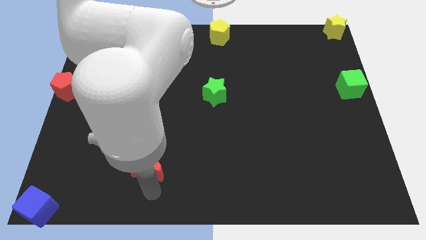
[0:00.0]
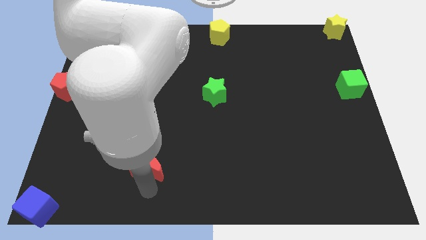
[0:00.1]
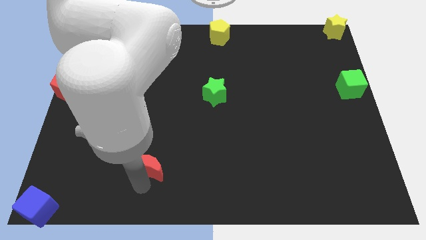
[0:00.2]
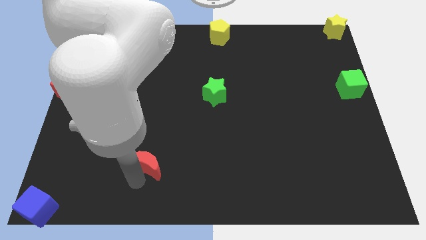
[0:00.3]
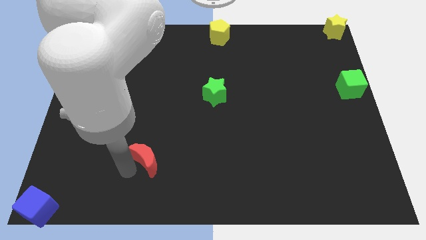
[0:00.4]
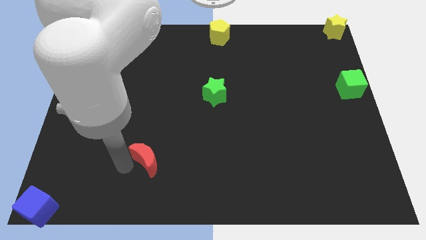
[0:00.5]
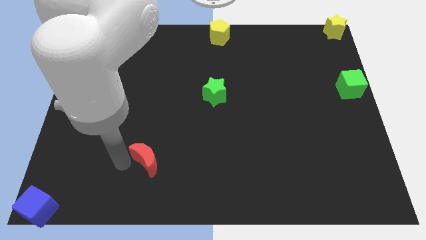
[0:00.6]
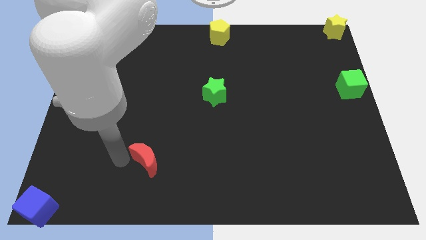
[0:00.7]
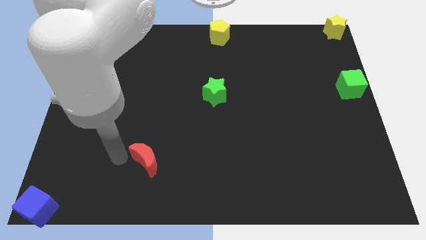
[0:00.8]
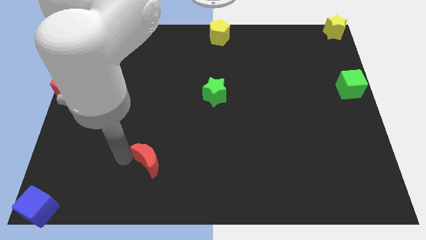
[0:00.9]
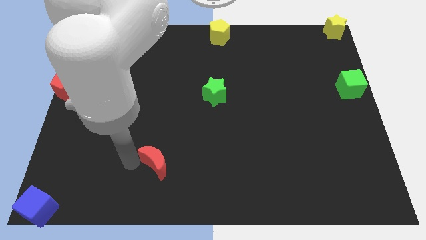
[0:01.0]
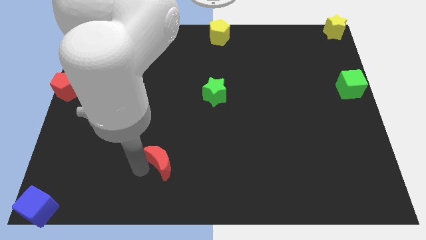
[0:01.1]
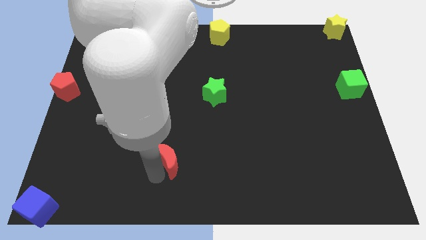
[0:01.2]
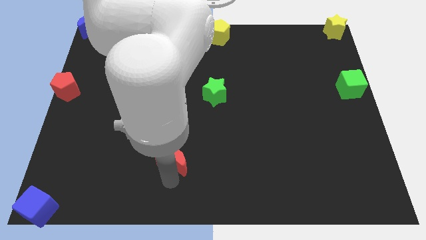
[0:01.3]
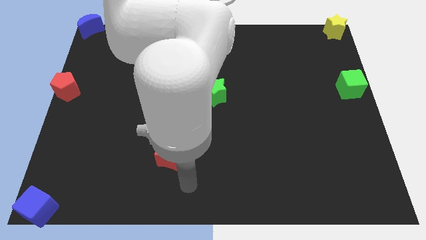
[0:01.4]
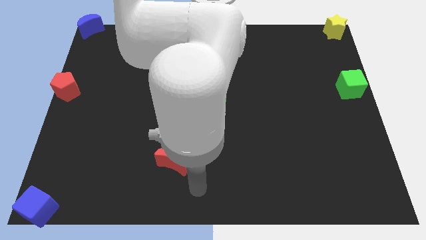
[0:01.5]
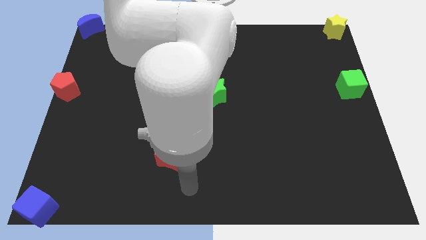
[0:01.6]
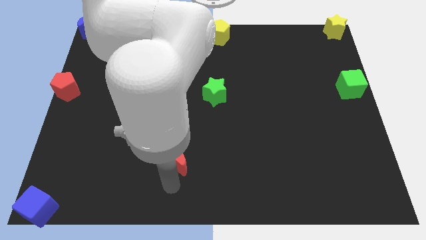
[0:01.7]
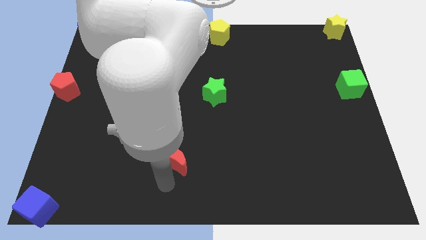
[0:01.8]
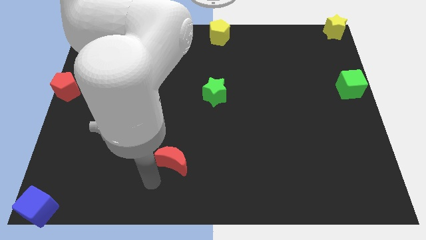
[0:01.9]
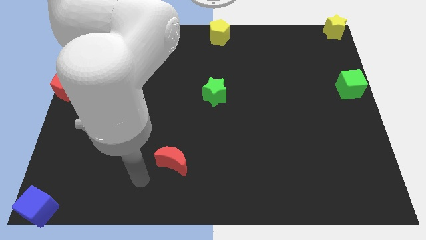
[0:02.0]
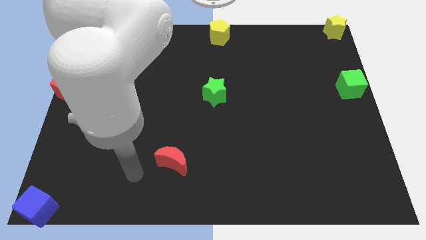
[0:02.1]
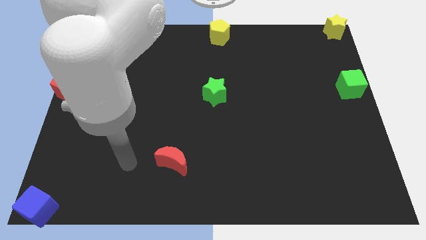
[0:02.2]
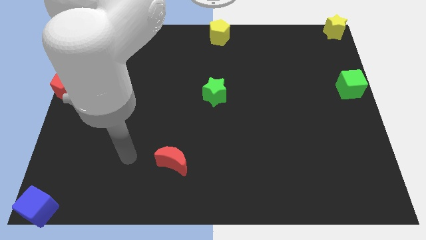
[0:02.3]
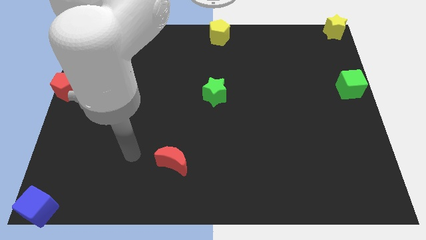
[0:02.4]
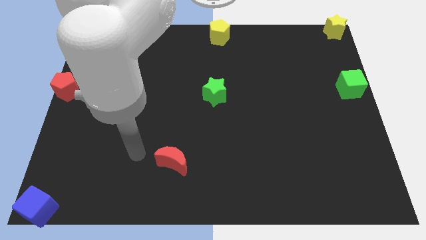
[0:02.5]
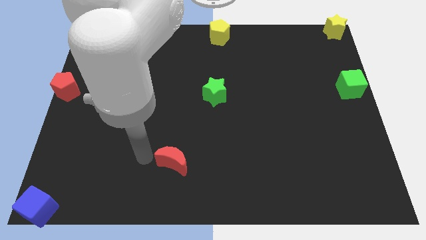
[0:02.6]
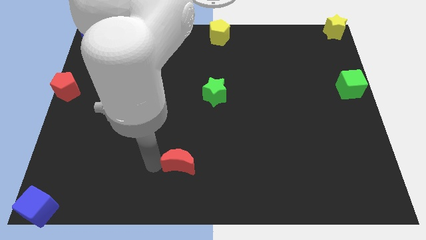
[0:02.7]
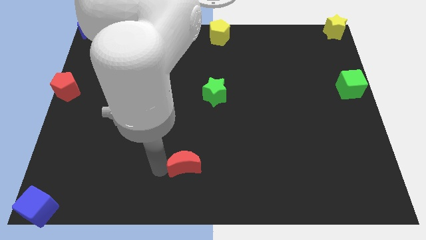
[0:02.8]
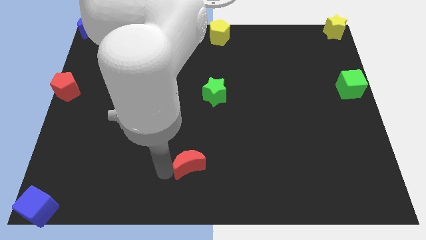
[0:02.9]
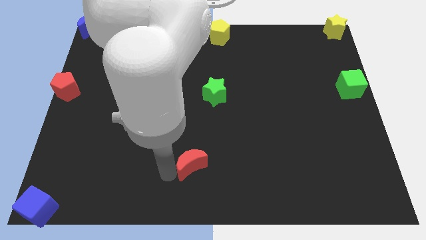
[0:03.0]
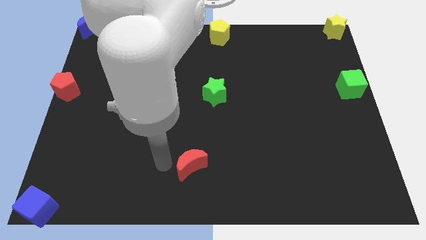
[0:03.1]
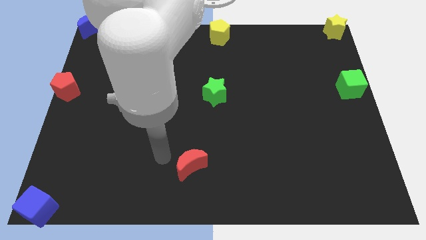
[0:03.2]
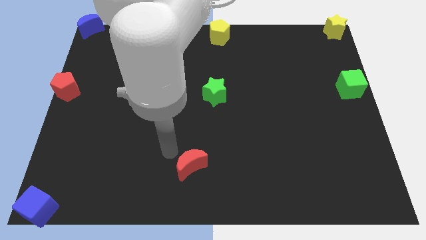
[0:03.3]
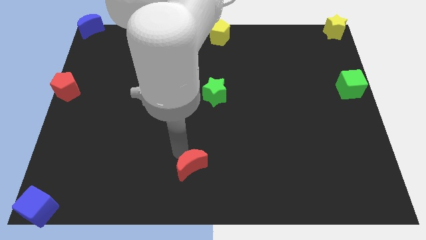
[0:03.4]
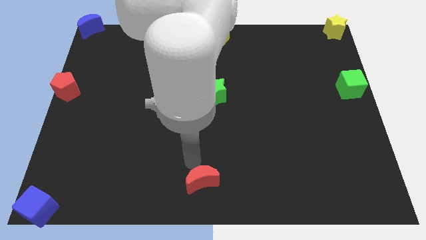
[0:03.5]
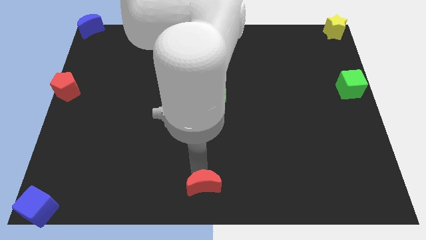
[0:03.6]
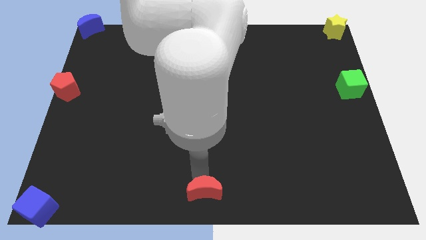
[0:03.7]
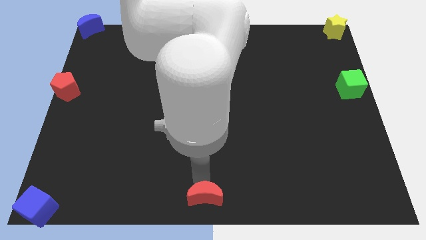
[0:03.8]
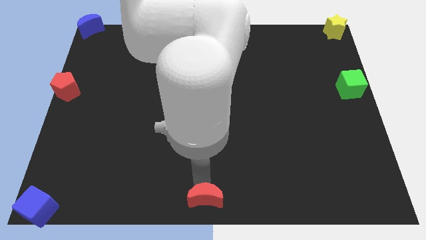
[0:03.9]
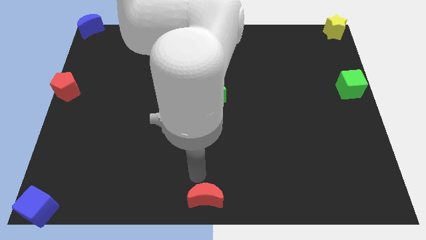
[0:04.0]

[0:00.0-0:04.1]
place red crescent towards bottom middle

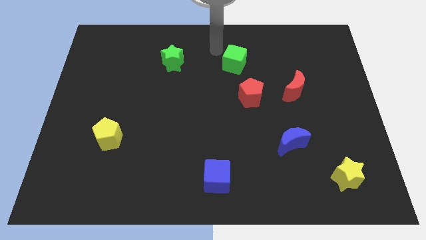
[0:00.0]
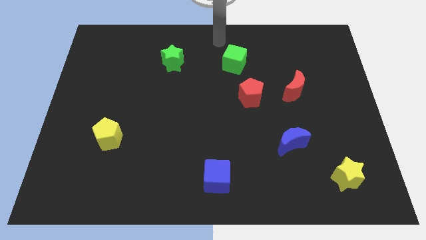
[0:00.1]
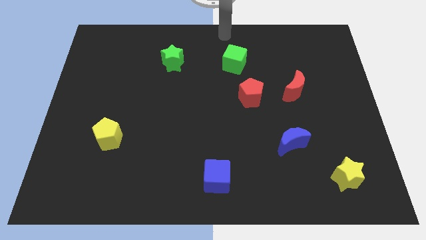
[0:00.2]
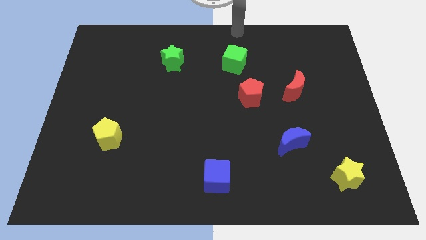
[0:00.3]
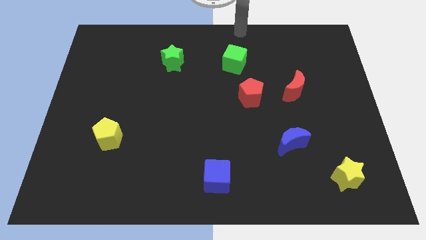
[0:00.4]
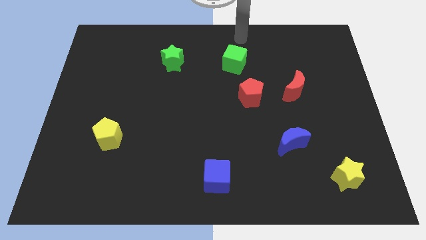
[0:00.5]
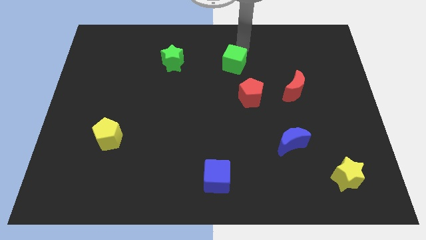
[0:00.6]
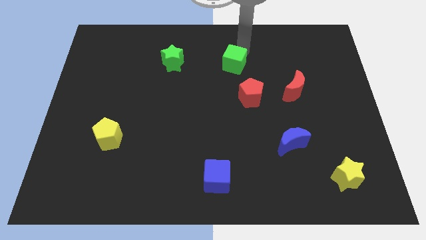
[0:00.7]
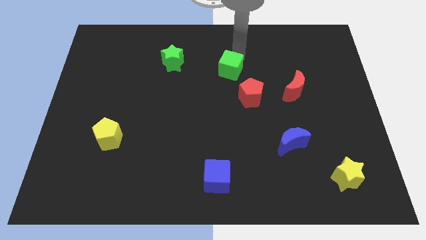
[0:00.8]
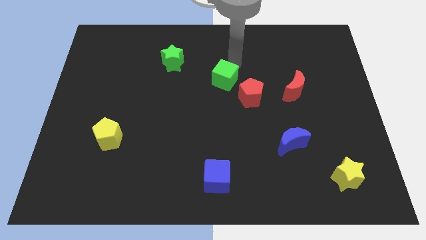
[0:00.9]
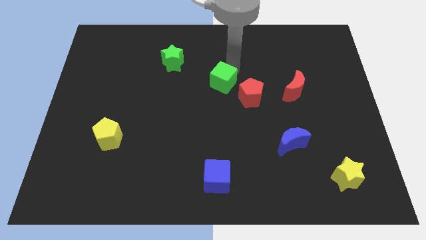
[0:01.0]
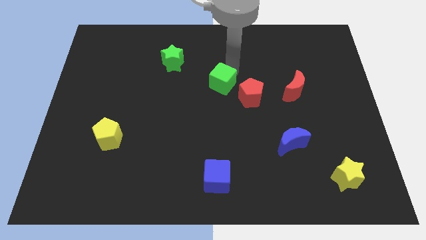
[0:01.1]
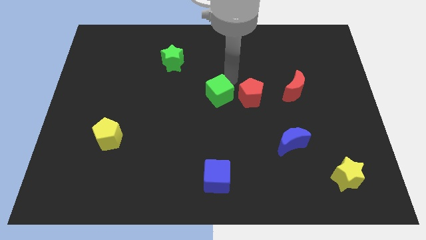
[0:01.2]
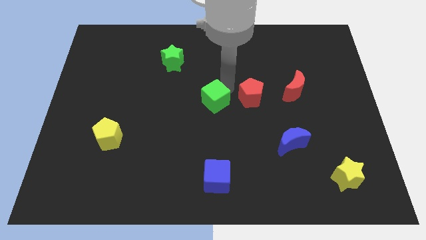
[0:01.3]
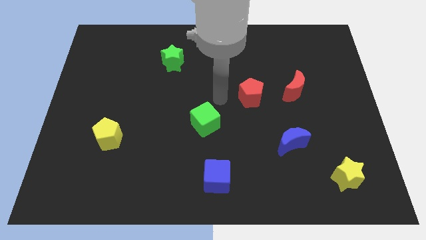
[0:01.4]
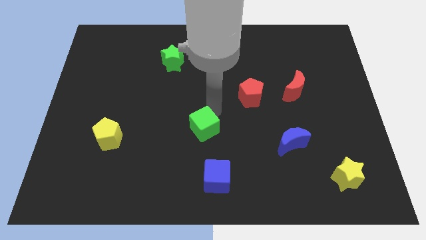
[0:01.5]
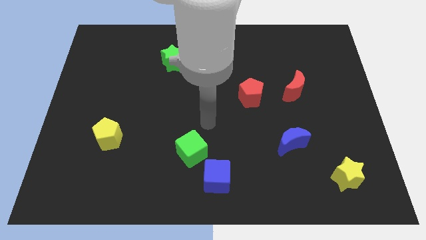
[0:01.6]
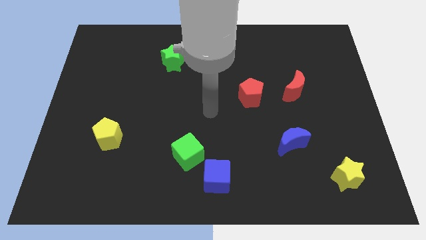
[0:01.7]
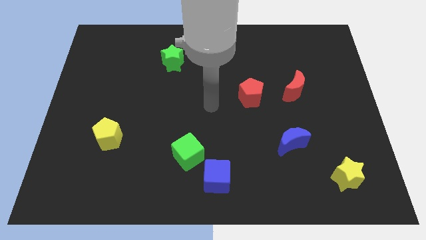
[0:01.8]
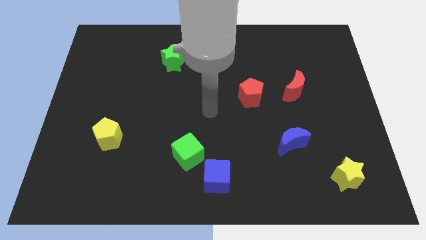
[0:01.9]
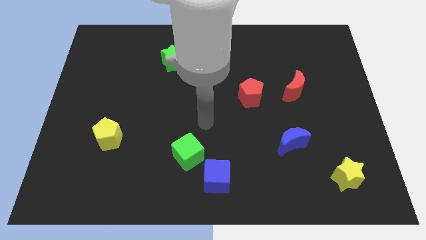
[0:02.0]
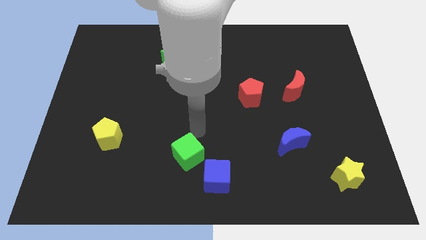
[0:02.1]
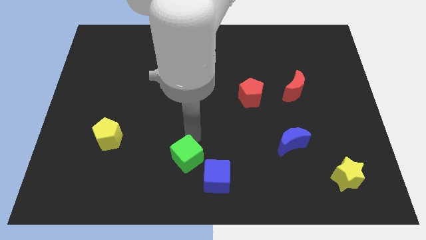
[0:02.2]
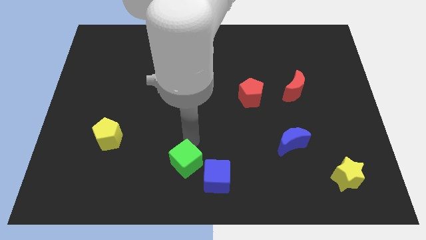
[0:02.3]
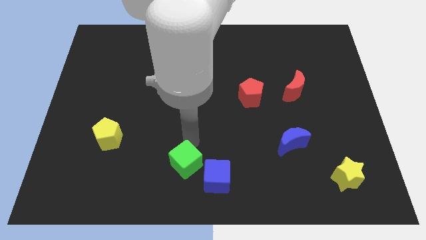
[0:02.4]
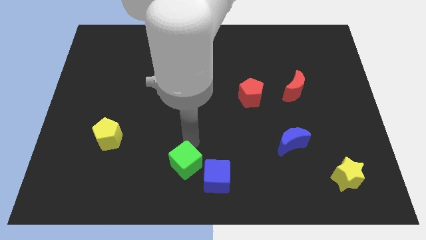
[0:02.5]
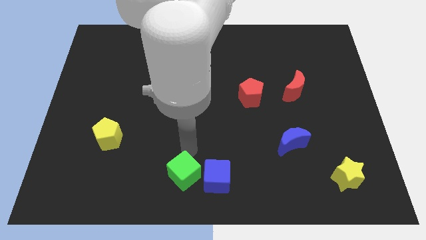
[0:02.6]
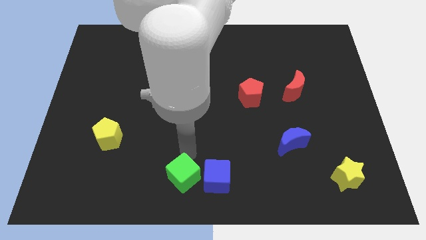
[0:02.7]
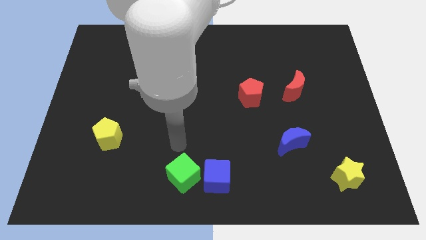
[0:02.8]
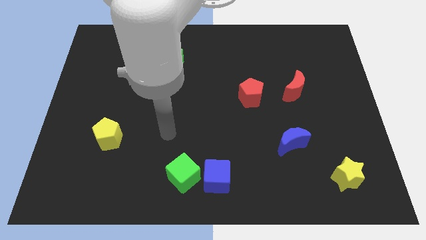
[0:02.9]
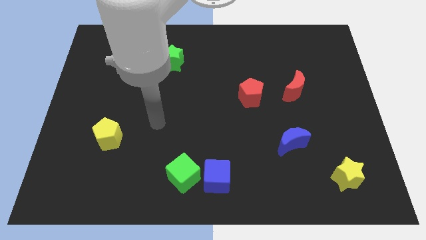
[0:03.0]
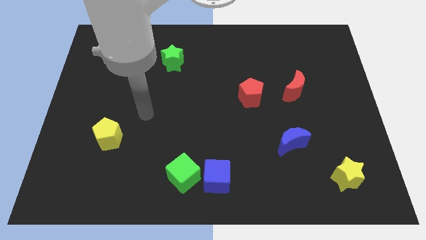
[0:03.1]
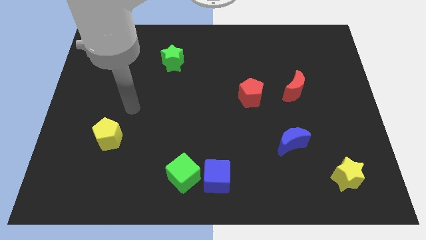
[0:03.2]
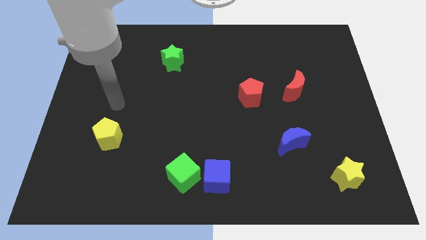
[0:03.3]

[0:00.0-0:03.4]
place the green cube at left side of the blue cube

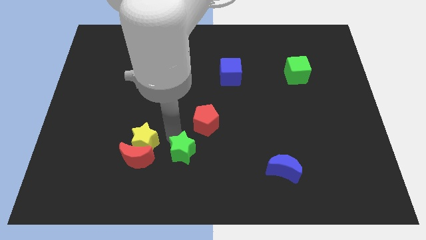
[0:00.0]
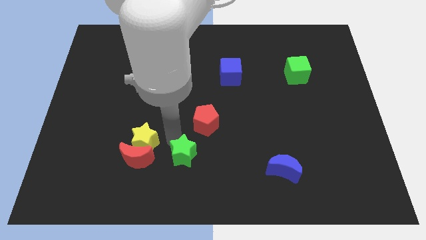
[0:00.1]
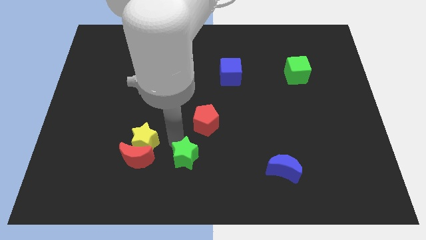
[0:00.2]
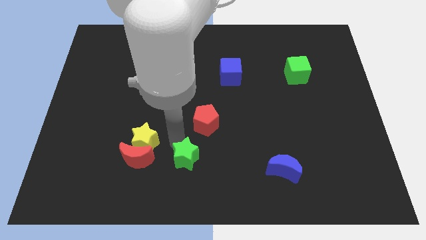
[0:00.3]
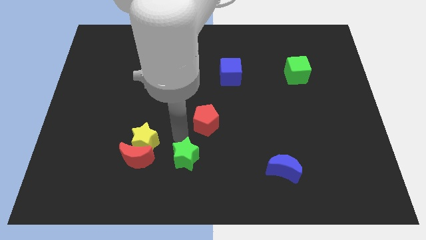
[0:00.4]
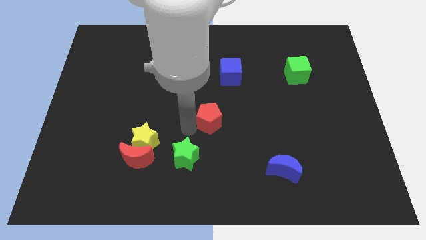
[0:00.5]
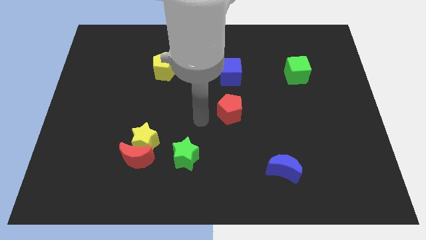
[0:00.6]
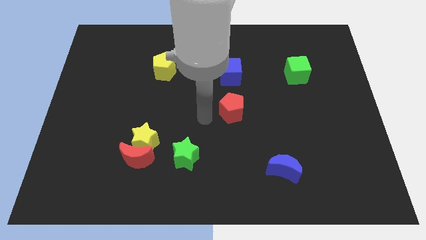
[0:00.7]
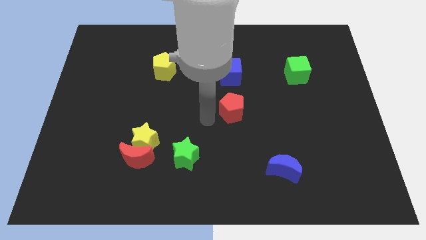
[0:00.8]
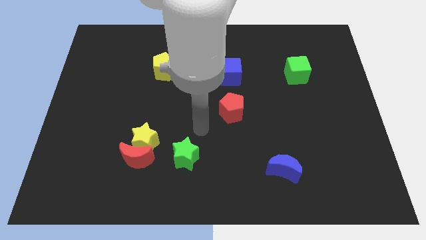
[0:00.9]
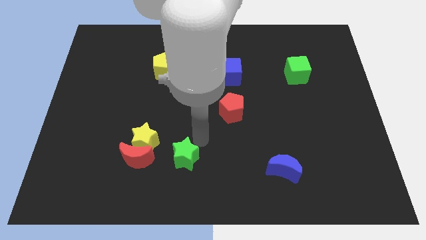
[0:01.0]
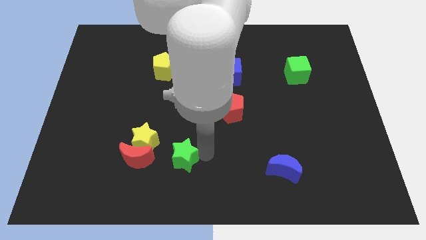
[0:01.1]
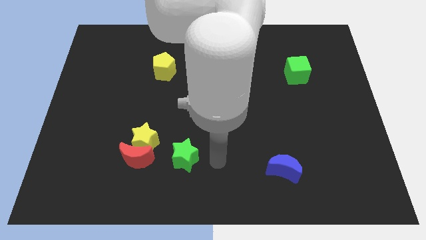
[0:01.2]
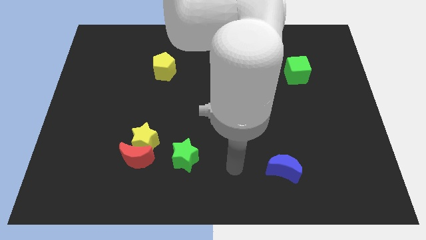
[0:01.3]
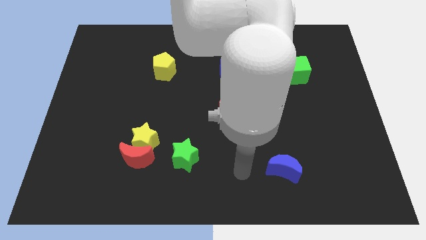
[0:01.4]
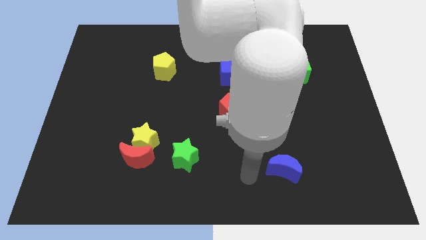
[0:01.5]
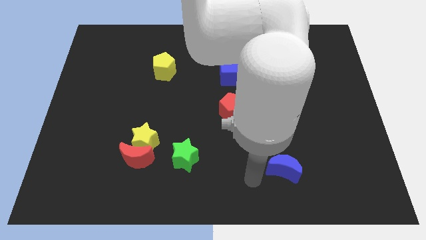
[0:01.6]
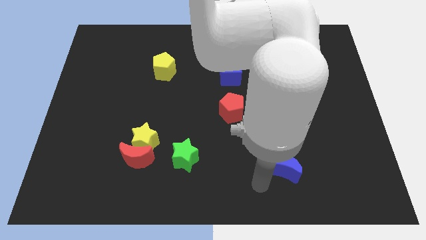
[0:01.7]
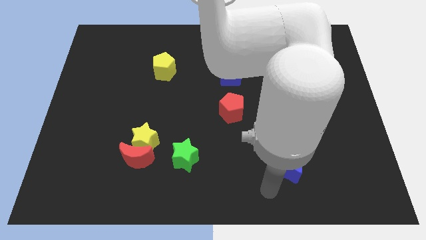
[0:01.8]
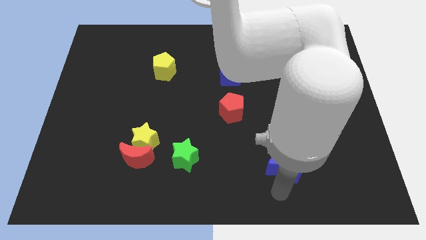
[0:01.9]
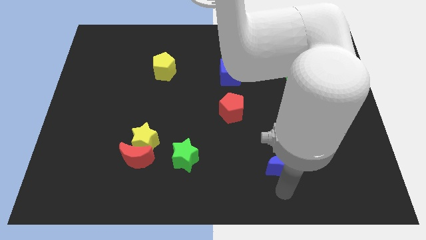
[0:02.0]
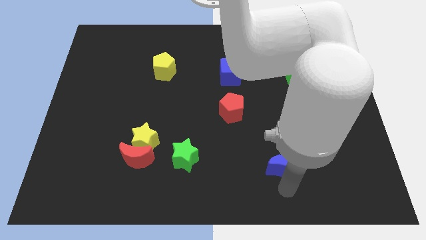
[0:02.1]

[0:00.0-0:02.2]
move the red pentagon below the blue cube
